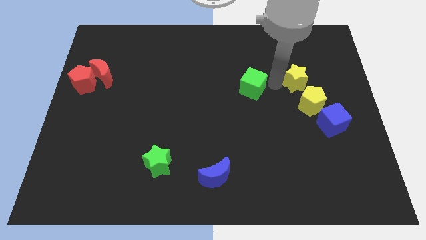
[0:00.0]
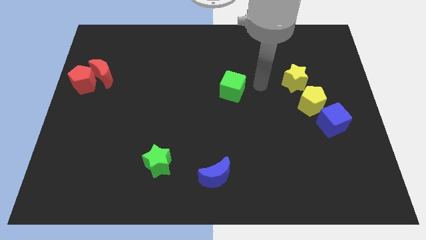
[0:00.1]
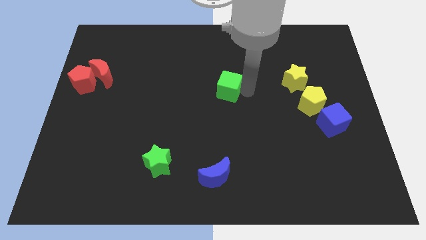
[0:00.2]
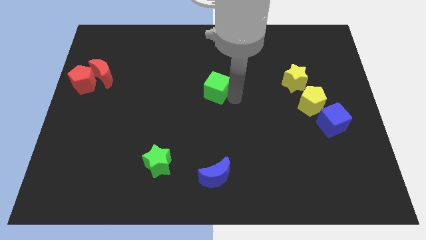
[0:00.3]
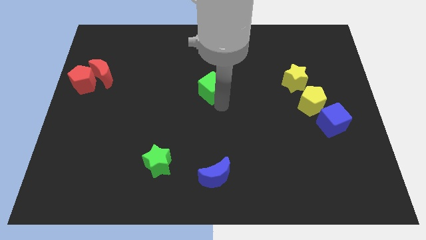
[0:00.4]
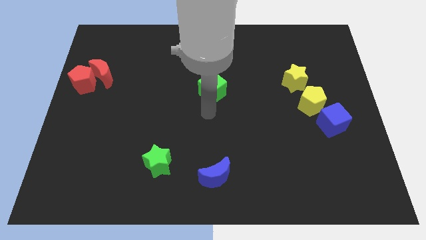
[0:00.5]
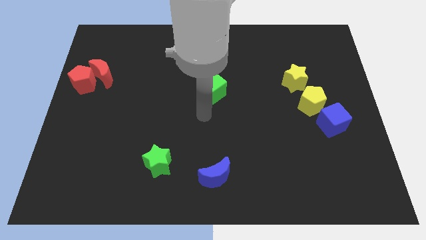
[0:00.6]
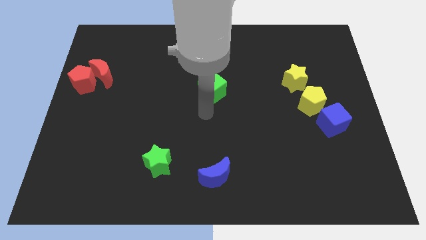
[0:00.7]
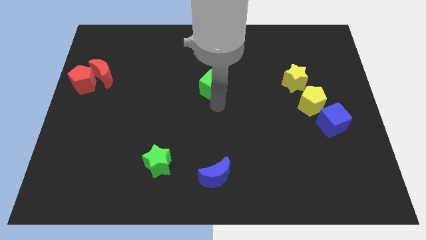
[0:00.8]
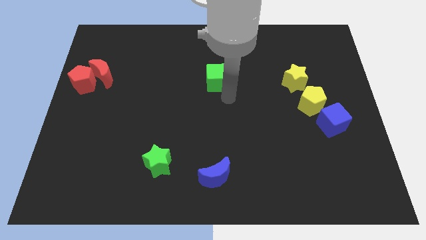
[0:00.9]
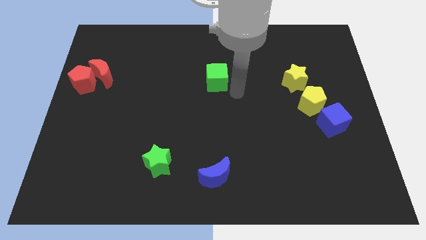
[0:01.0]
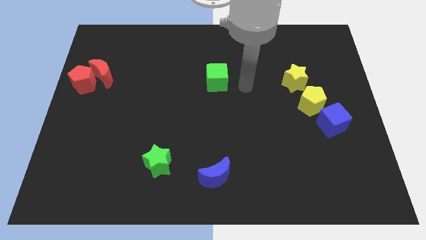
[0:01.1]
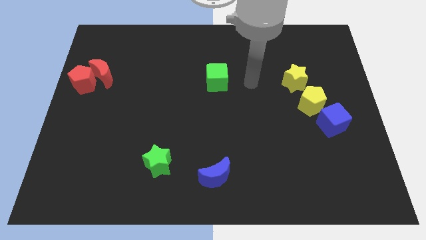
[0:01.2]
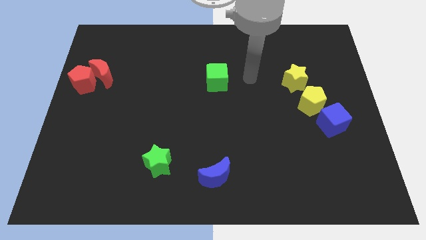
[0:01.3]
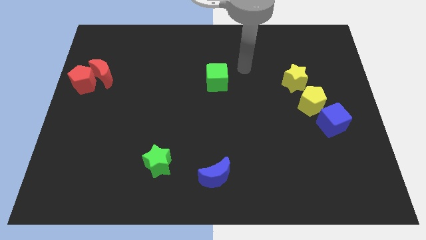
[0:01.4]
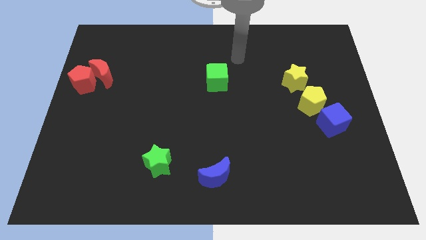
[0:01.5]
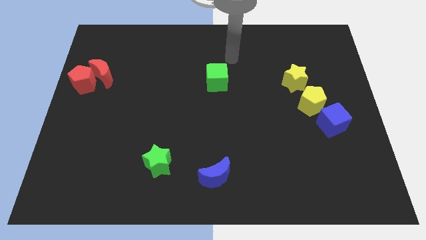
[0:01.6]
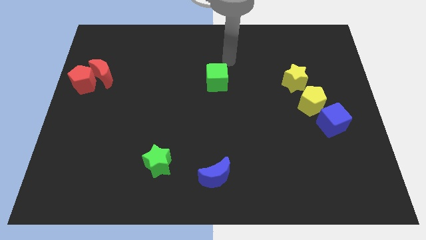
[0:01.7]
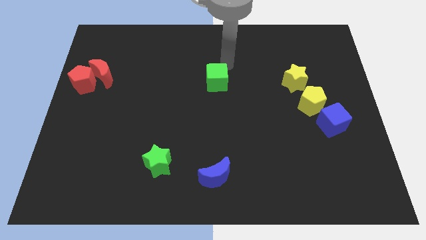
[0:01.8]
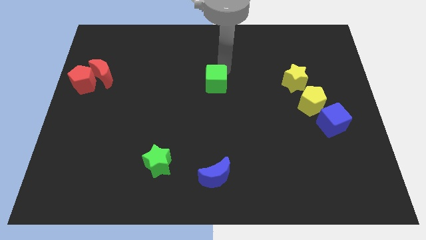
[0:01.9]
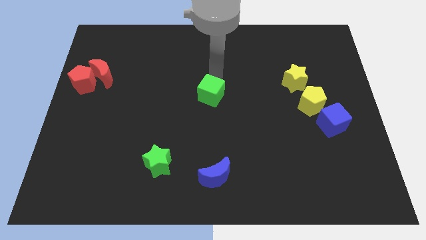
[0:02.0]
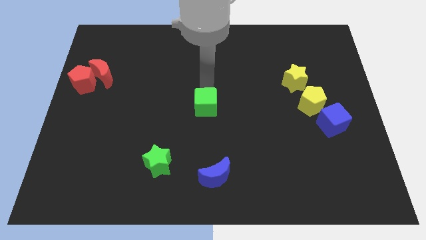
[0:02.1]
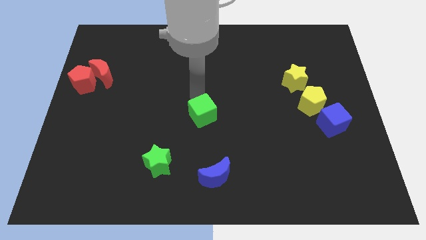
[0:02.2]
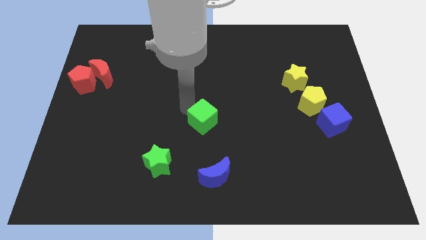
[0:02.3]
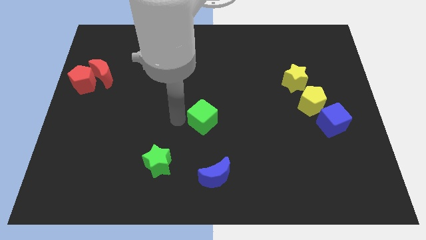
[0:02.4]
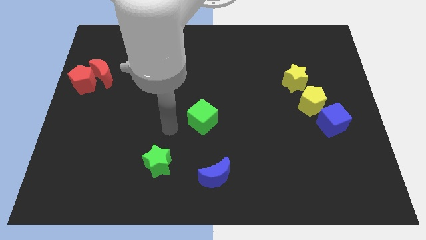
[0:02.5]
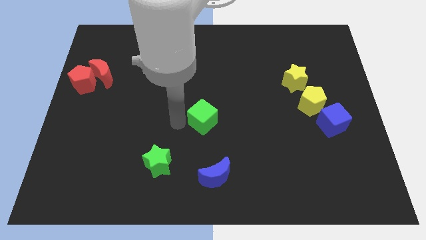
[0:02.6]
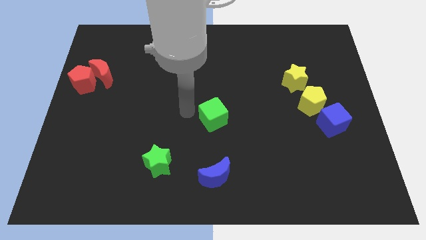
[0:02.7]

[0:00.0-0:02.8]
make a triangle with green cube blue moon and green star

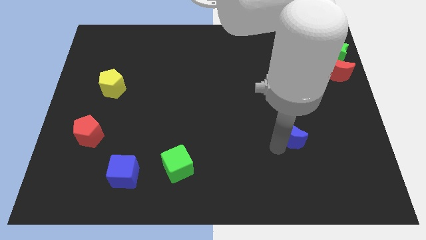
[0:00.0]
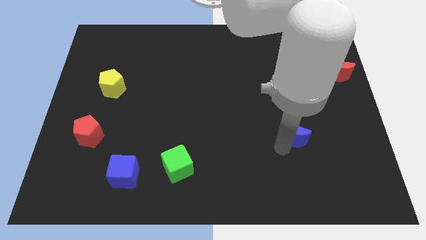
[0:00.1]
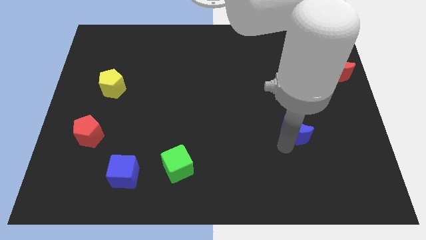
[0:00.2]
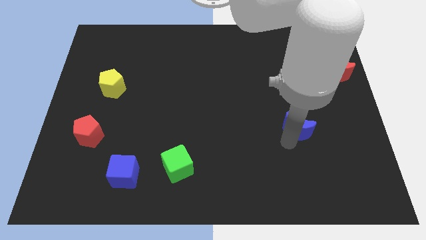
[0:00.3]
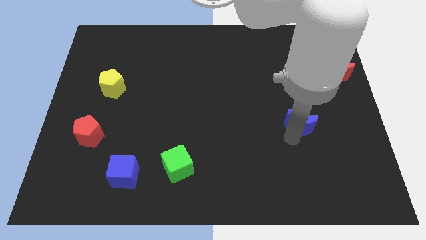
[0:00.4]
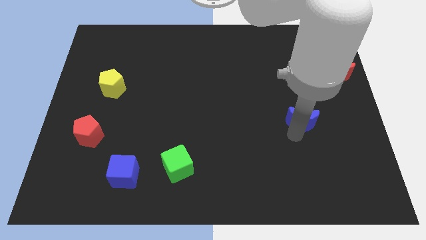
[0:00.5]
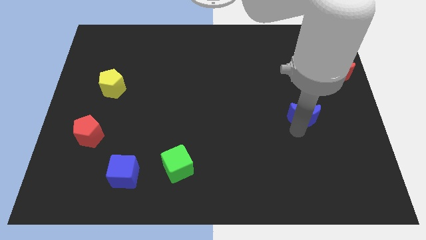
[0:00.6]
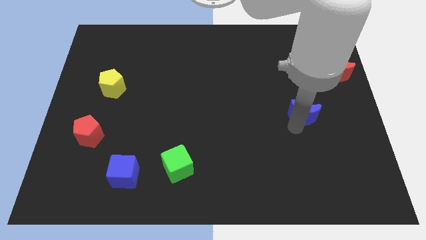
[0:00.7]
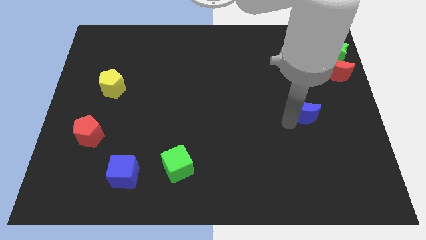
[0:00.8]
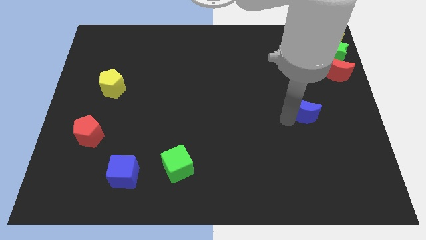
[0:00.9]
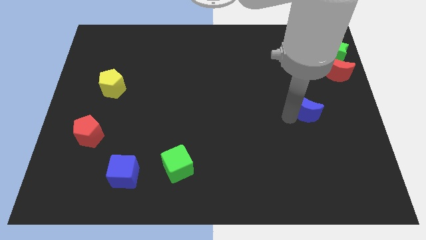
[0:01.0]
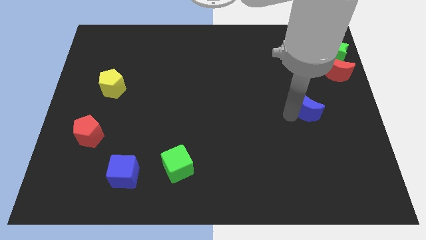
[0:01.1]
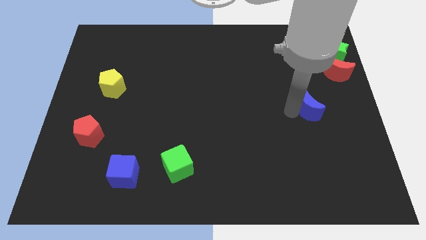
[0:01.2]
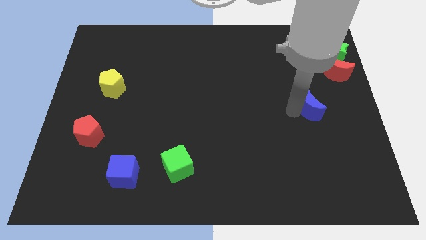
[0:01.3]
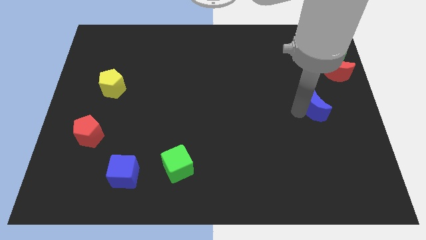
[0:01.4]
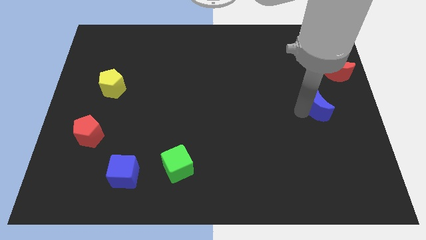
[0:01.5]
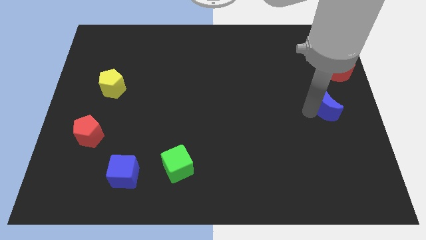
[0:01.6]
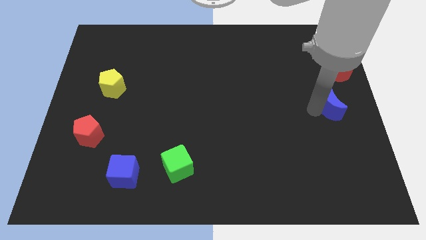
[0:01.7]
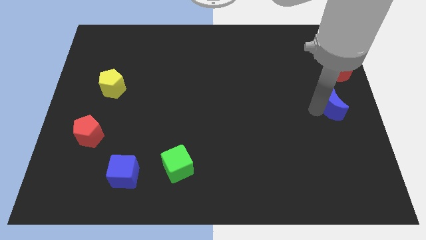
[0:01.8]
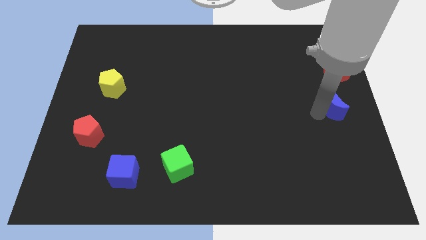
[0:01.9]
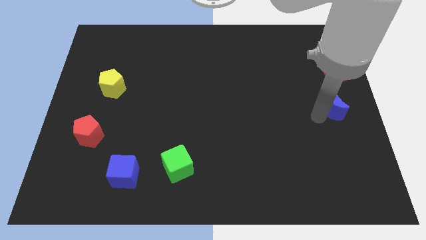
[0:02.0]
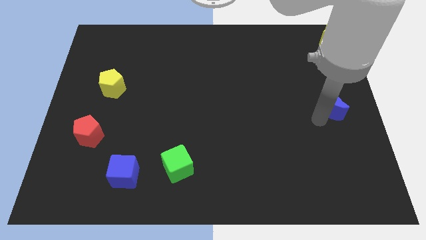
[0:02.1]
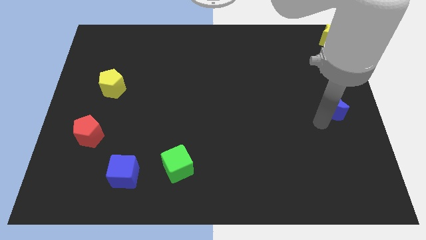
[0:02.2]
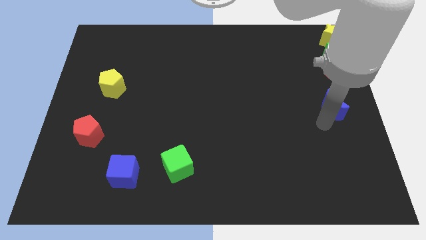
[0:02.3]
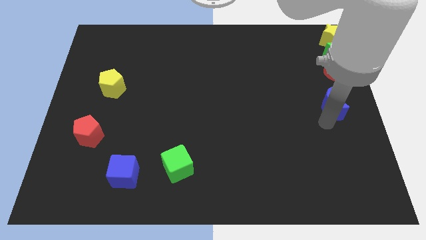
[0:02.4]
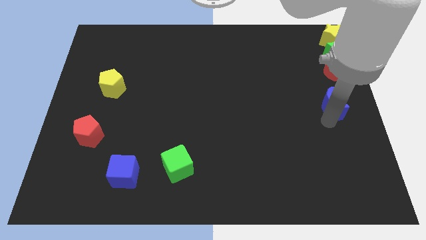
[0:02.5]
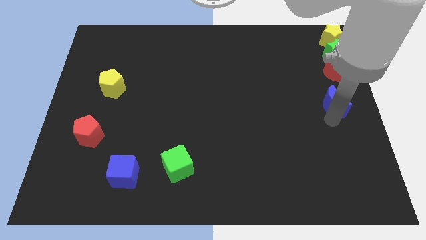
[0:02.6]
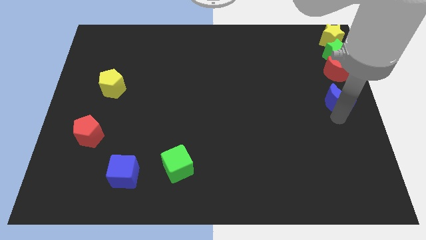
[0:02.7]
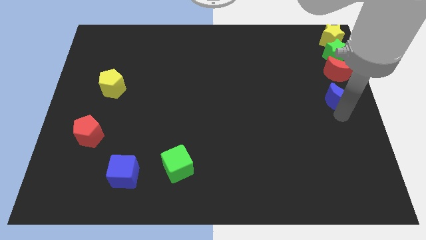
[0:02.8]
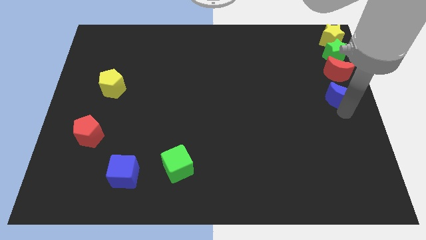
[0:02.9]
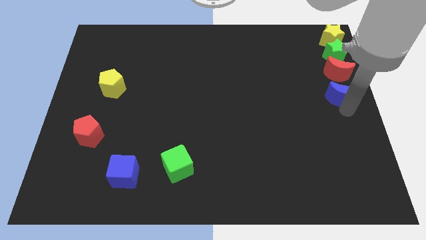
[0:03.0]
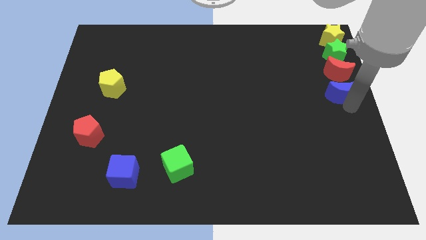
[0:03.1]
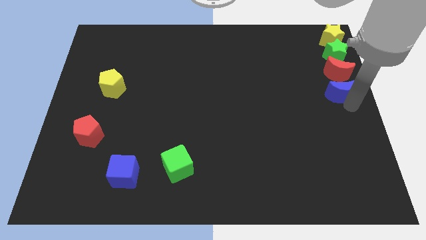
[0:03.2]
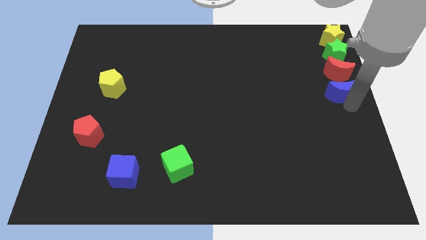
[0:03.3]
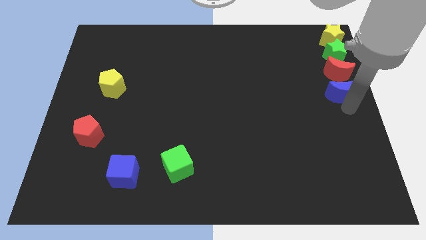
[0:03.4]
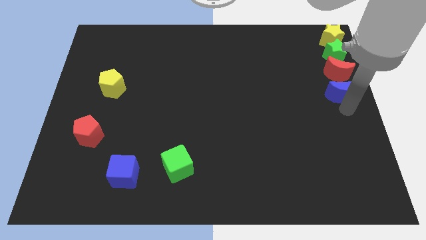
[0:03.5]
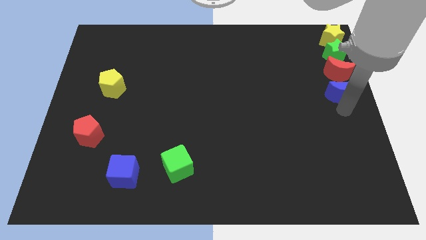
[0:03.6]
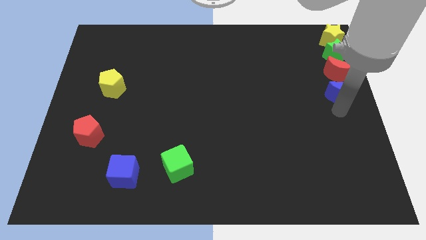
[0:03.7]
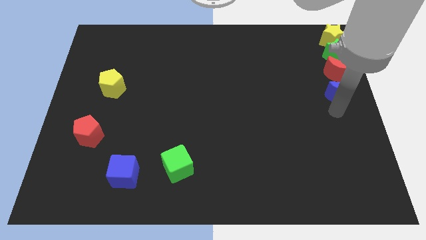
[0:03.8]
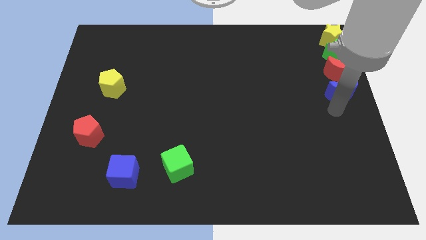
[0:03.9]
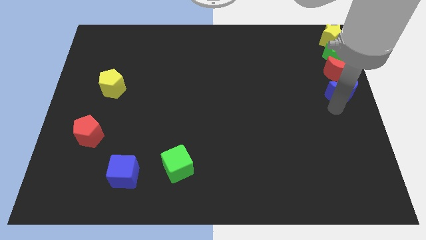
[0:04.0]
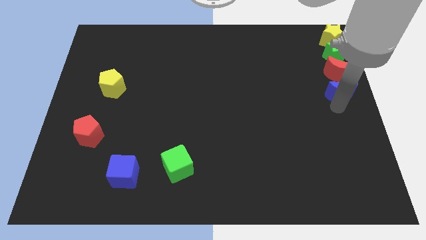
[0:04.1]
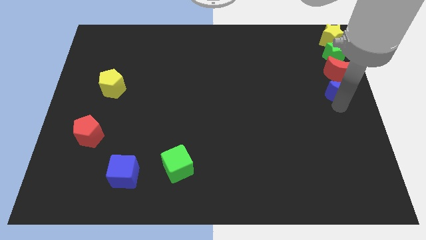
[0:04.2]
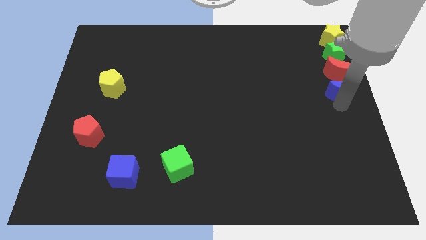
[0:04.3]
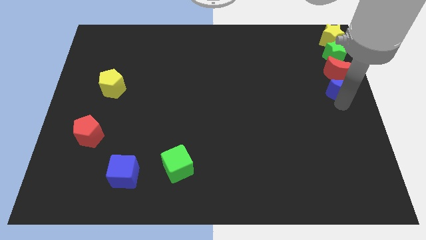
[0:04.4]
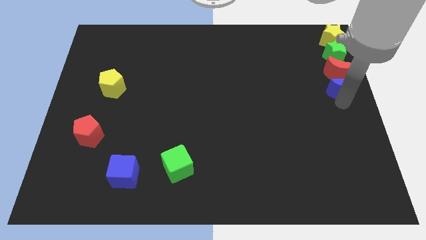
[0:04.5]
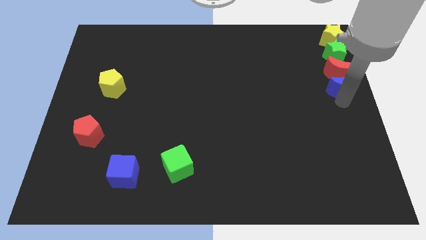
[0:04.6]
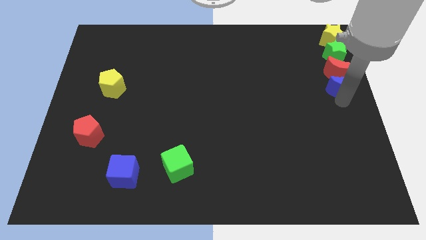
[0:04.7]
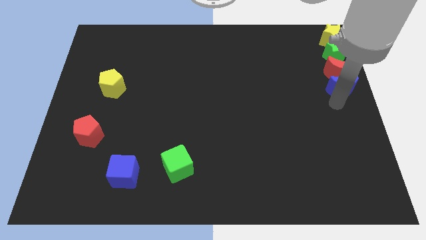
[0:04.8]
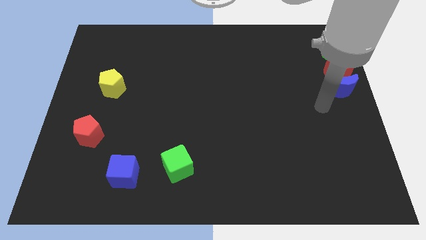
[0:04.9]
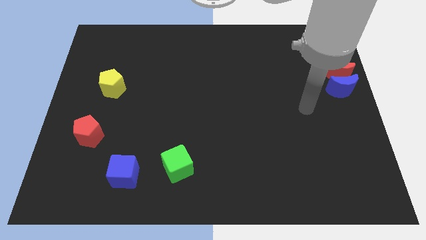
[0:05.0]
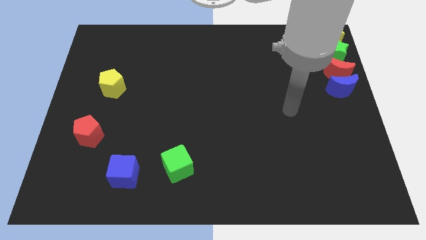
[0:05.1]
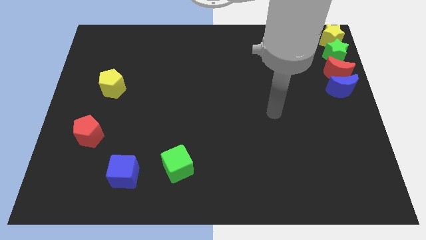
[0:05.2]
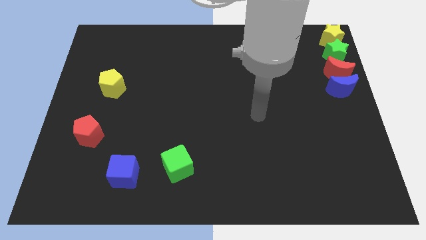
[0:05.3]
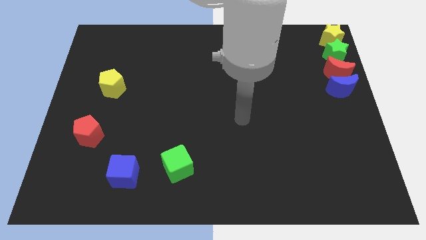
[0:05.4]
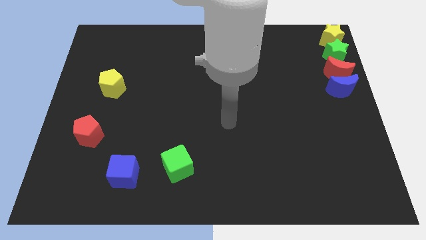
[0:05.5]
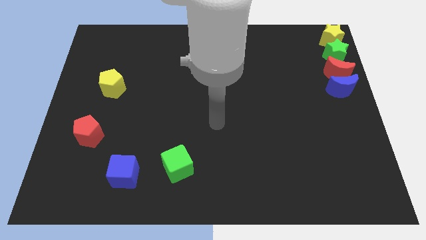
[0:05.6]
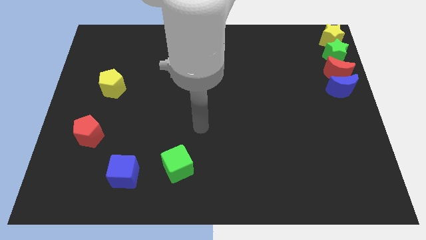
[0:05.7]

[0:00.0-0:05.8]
place the blue crescent bottom of red crescent

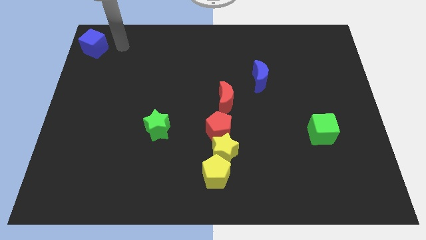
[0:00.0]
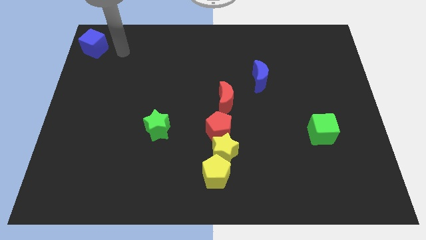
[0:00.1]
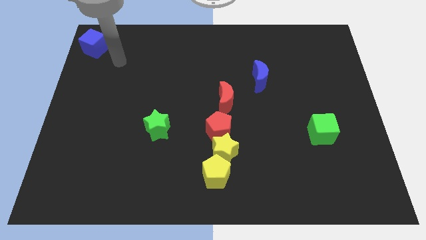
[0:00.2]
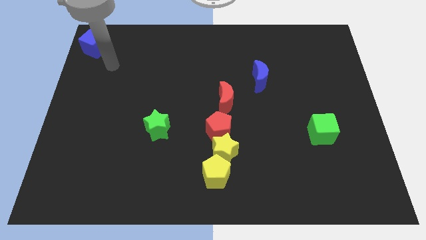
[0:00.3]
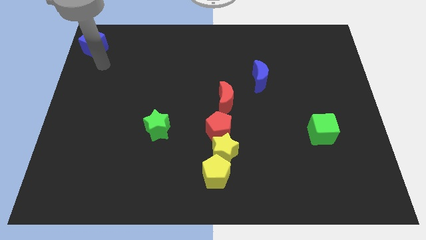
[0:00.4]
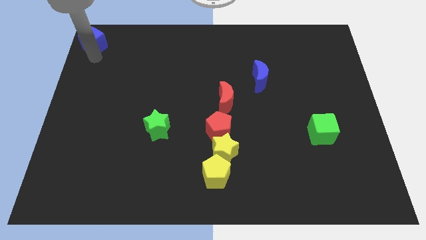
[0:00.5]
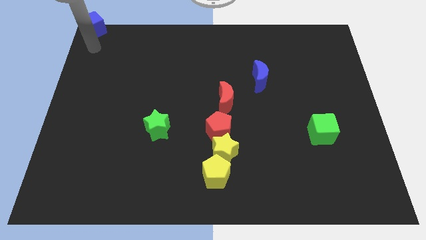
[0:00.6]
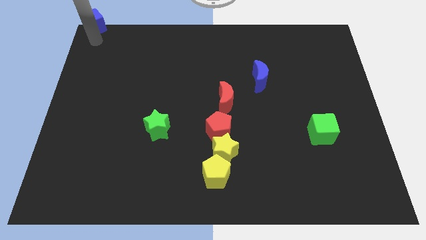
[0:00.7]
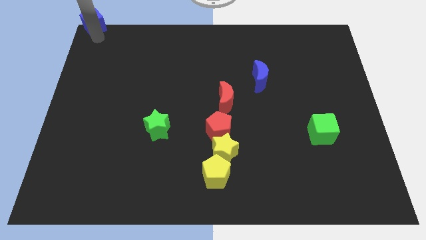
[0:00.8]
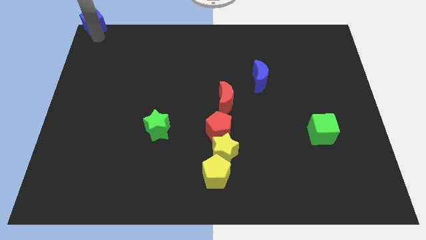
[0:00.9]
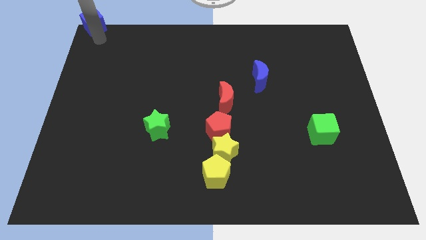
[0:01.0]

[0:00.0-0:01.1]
put blue cube at top left corner
